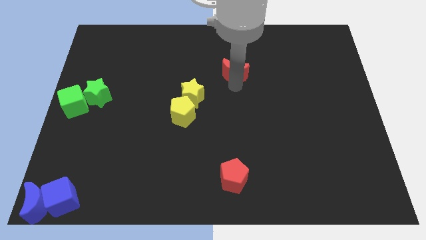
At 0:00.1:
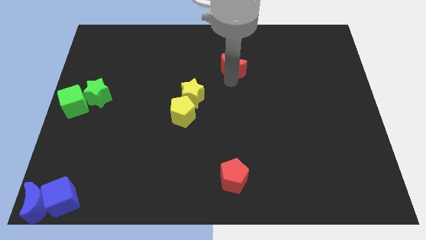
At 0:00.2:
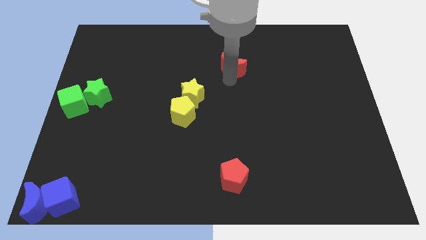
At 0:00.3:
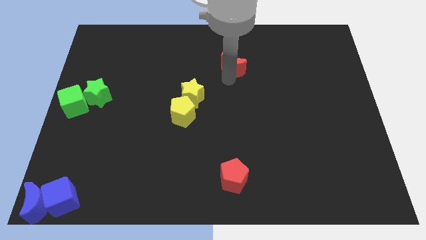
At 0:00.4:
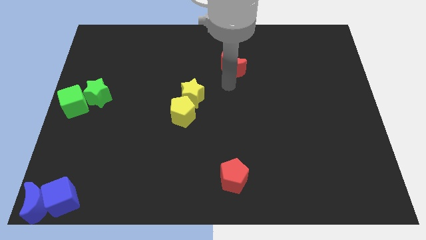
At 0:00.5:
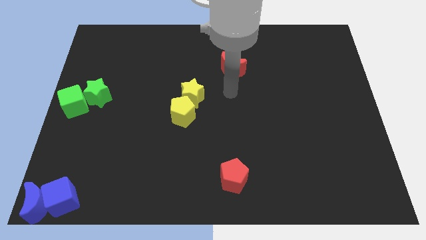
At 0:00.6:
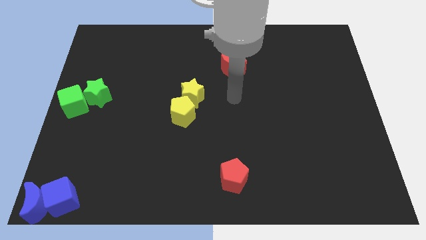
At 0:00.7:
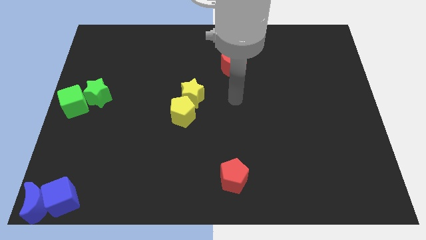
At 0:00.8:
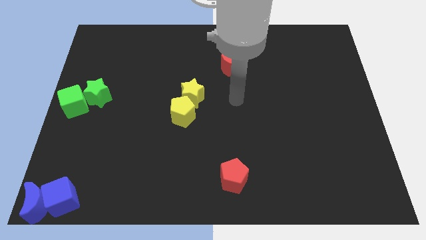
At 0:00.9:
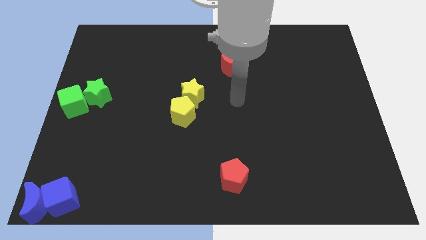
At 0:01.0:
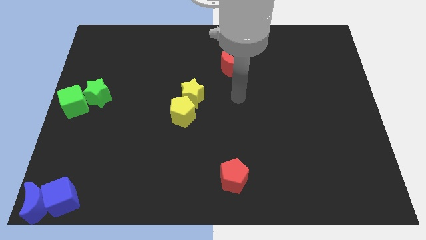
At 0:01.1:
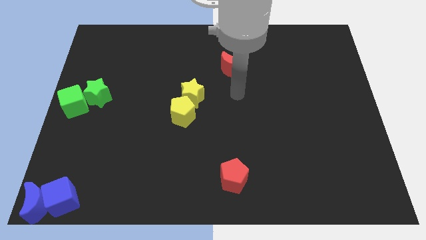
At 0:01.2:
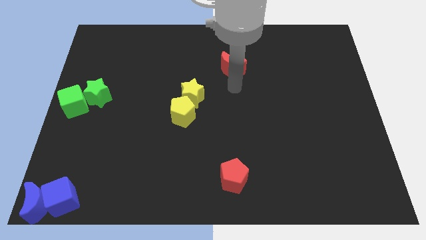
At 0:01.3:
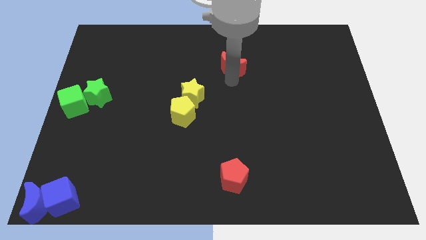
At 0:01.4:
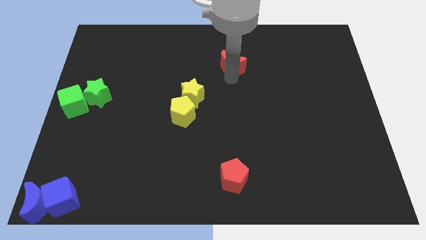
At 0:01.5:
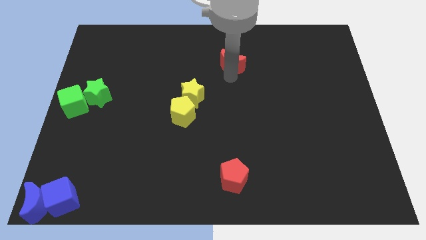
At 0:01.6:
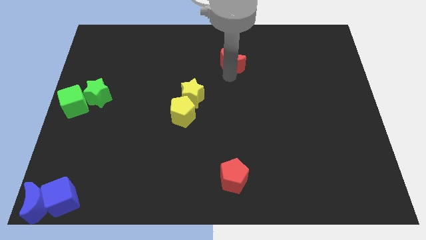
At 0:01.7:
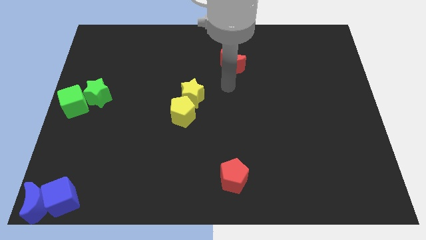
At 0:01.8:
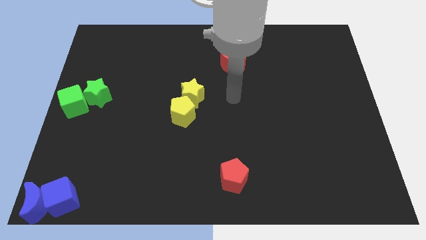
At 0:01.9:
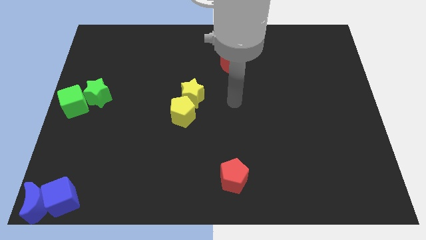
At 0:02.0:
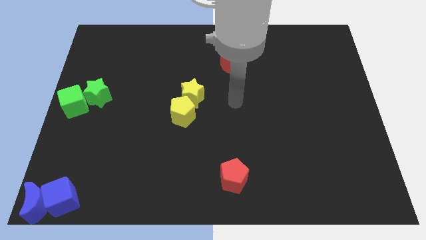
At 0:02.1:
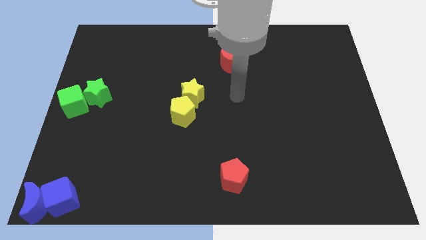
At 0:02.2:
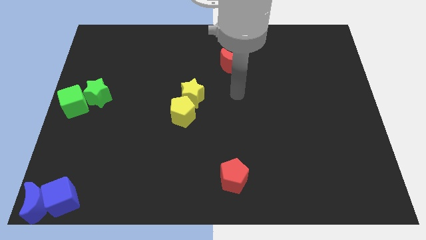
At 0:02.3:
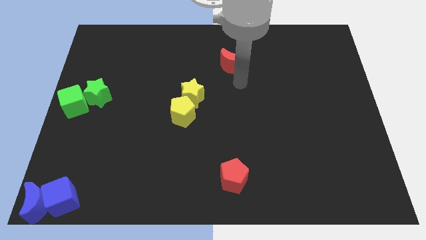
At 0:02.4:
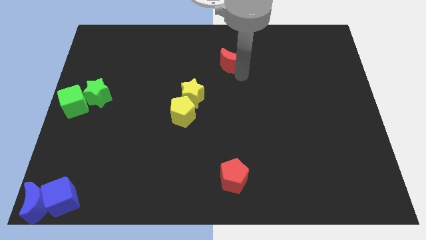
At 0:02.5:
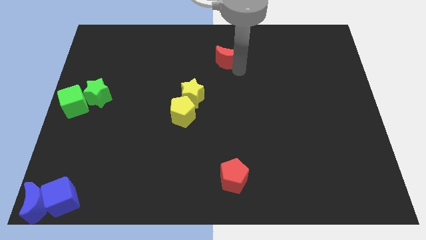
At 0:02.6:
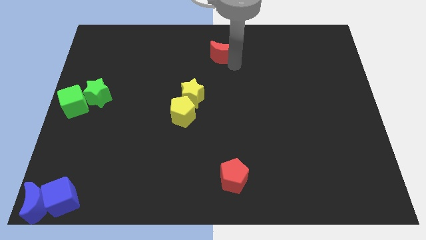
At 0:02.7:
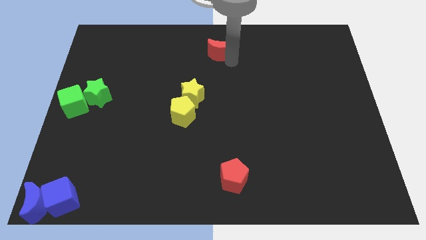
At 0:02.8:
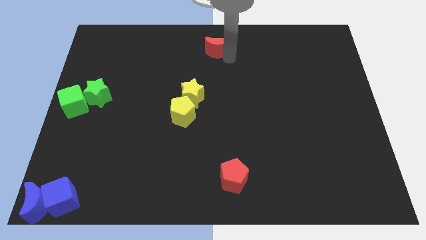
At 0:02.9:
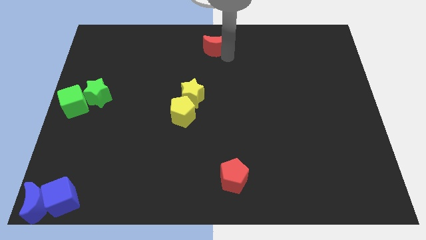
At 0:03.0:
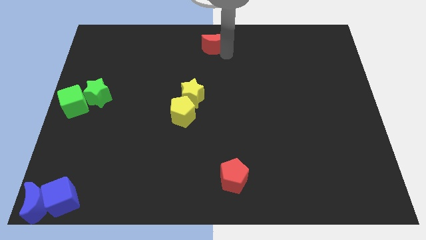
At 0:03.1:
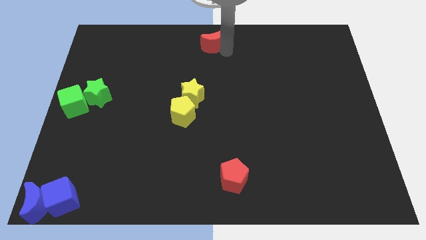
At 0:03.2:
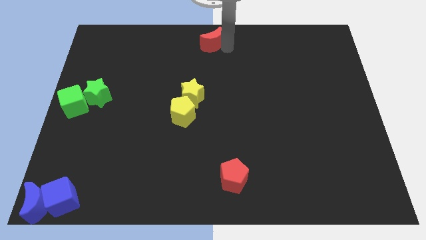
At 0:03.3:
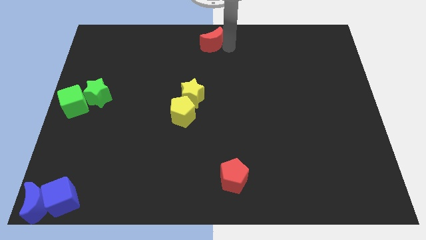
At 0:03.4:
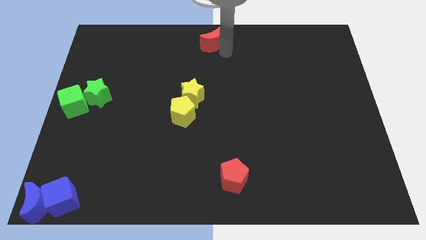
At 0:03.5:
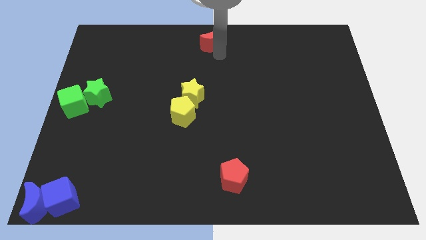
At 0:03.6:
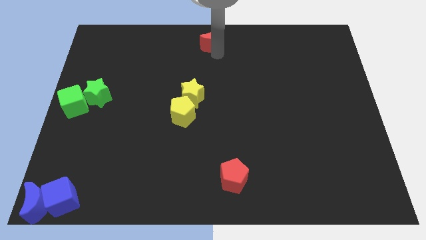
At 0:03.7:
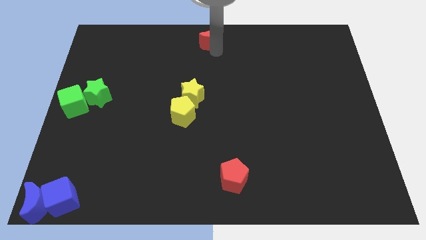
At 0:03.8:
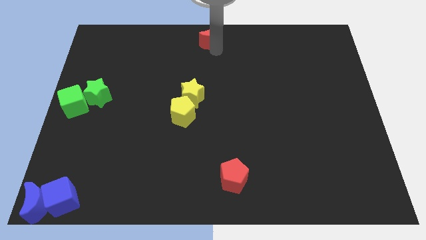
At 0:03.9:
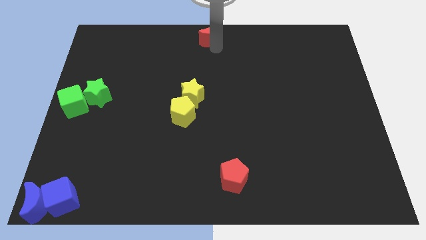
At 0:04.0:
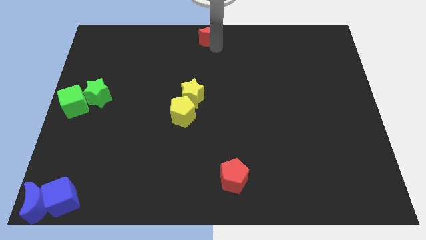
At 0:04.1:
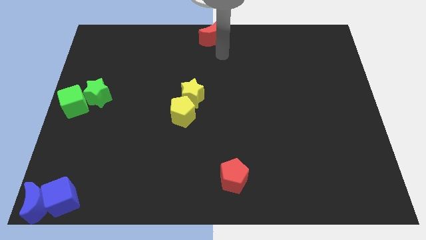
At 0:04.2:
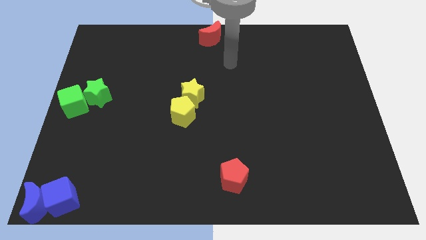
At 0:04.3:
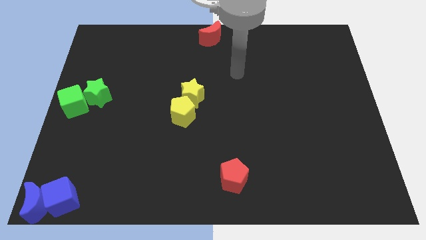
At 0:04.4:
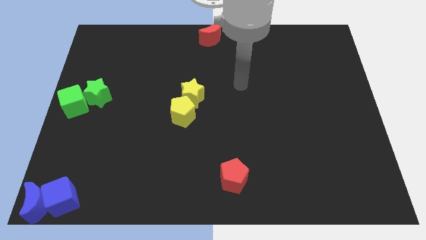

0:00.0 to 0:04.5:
place the red moon at the top center

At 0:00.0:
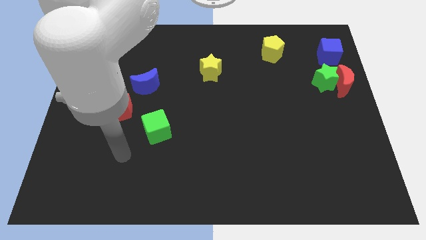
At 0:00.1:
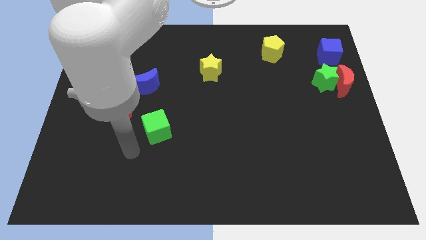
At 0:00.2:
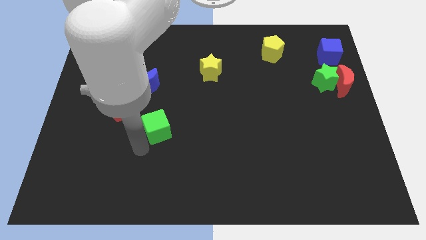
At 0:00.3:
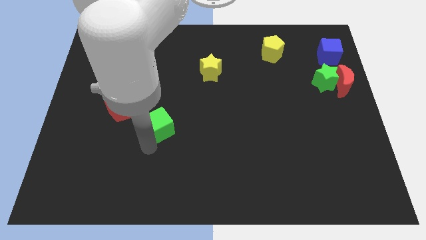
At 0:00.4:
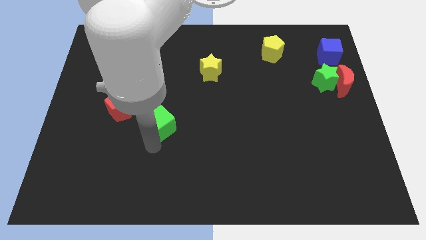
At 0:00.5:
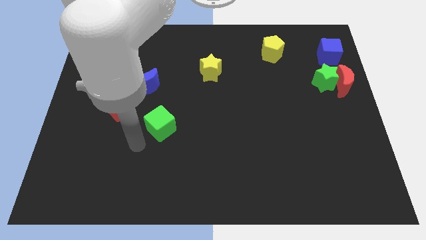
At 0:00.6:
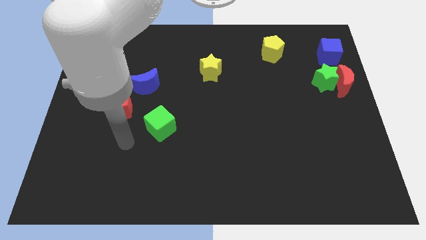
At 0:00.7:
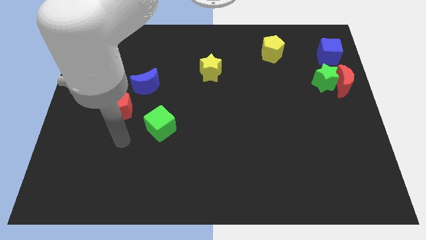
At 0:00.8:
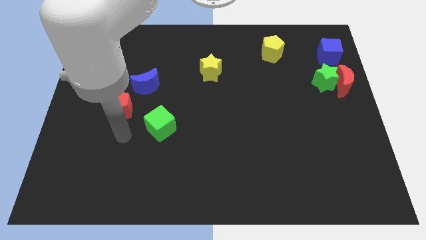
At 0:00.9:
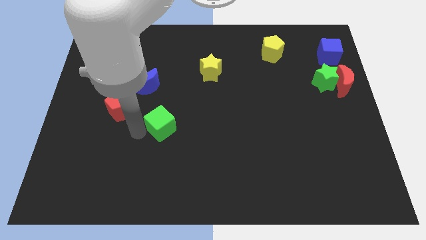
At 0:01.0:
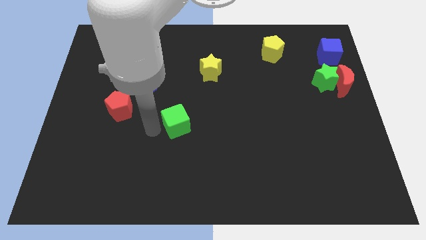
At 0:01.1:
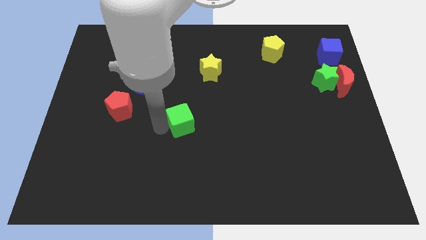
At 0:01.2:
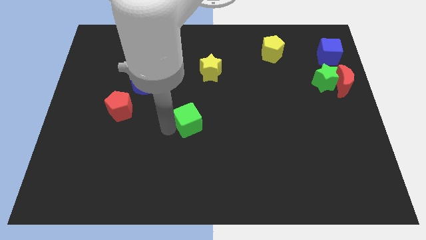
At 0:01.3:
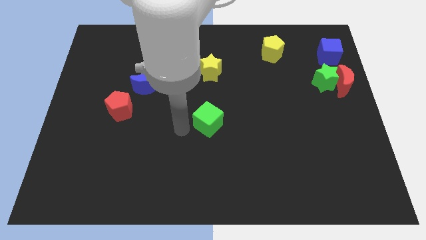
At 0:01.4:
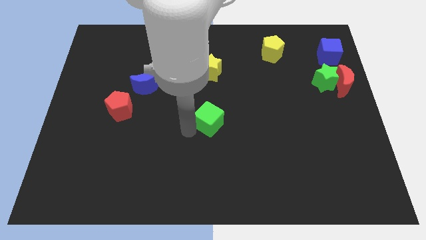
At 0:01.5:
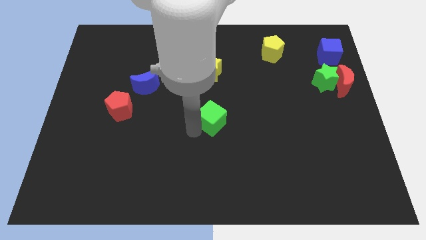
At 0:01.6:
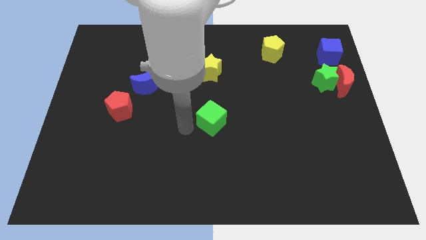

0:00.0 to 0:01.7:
move the green cube to the center of the board

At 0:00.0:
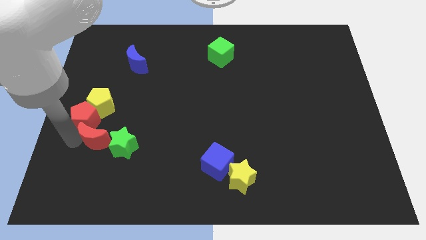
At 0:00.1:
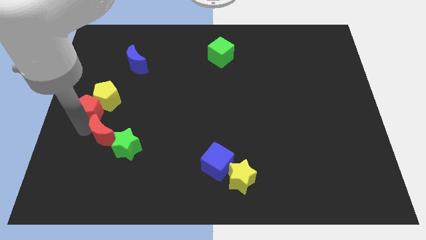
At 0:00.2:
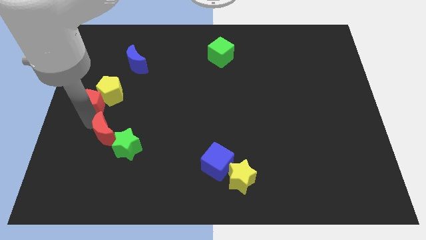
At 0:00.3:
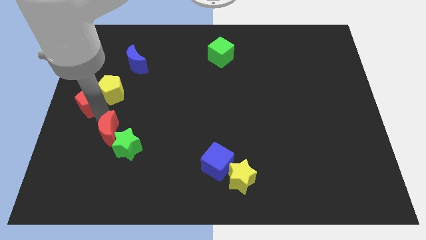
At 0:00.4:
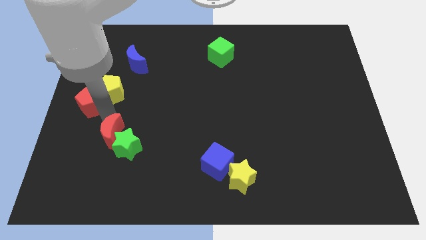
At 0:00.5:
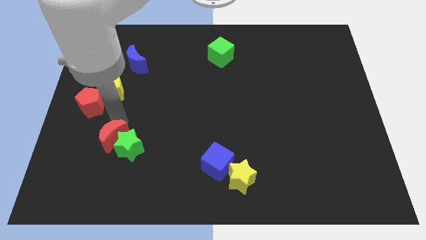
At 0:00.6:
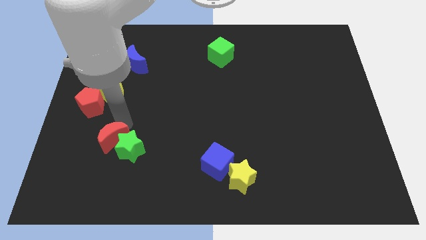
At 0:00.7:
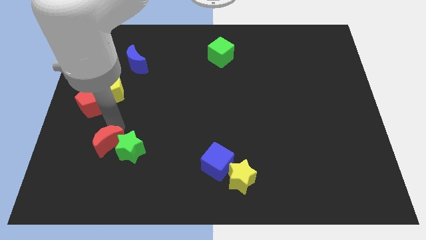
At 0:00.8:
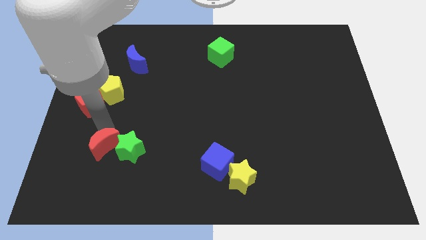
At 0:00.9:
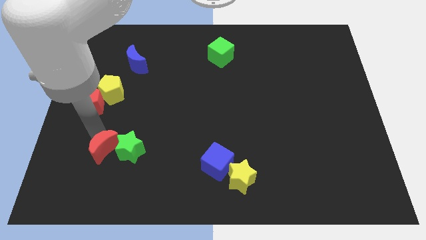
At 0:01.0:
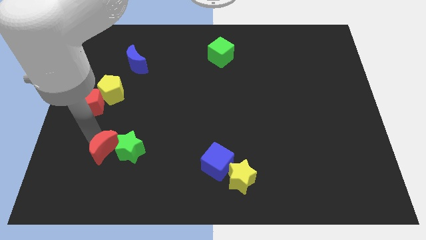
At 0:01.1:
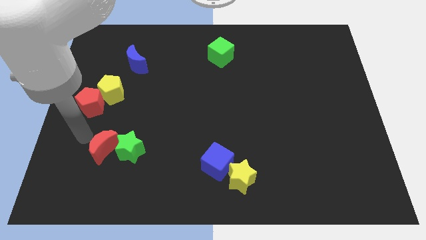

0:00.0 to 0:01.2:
separate red moon from red pentagon

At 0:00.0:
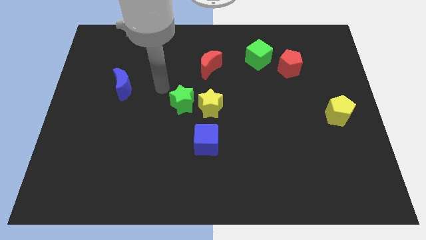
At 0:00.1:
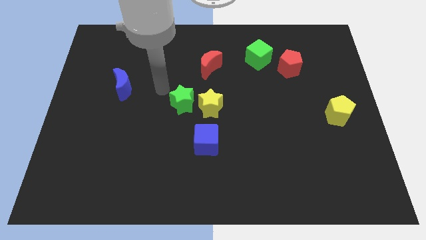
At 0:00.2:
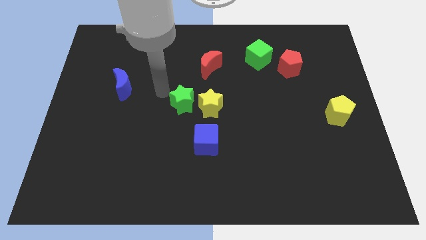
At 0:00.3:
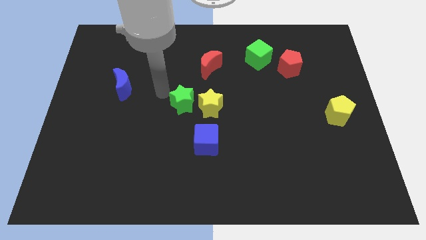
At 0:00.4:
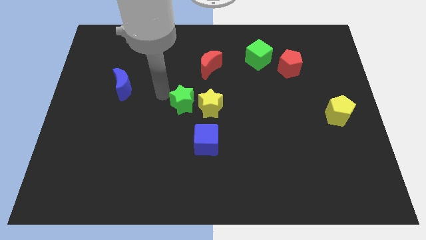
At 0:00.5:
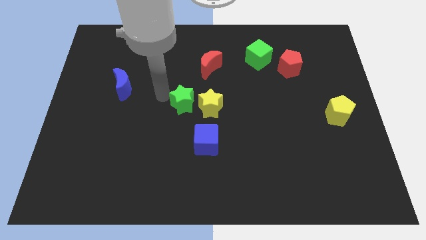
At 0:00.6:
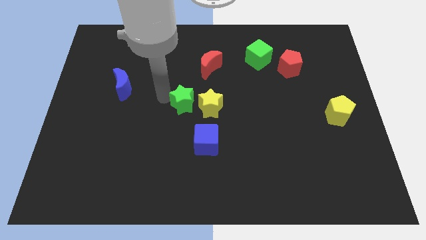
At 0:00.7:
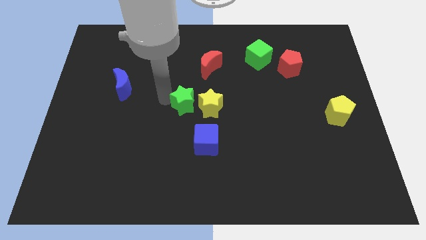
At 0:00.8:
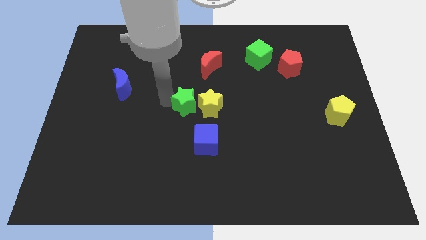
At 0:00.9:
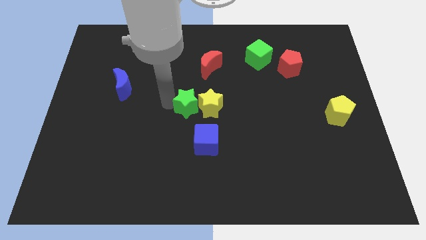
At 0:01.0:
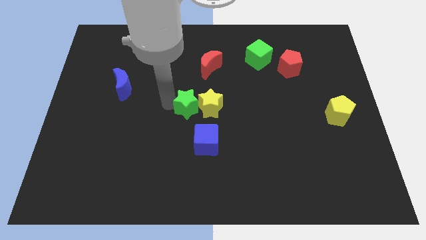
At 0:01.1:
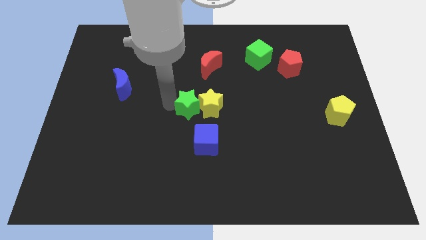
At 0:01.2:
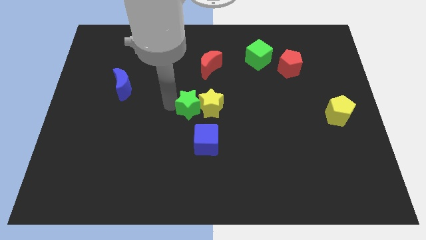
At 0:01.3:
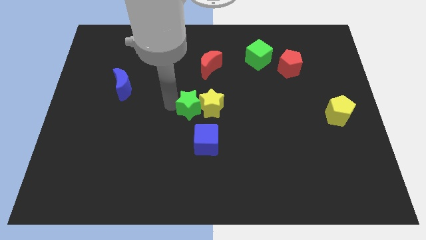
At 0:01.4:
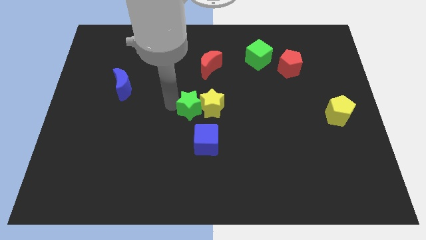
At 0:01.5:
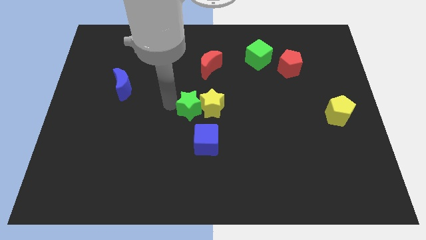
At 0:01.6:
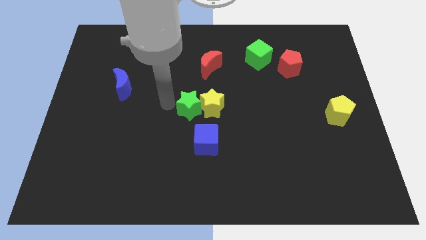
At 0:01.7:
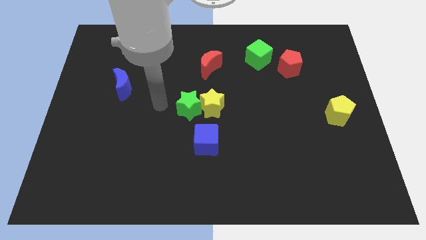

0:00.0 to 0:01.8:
place the green star to the left of the yellow star
